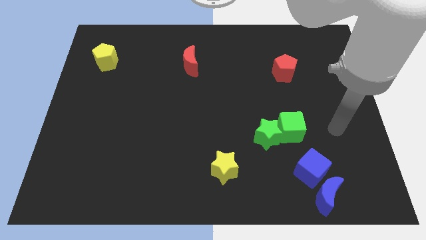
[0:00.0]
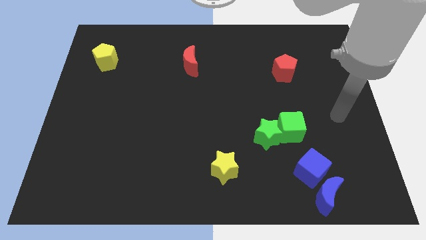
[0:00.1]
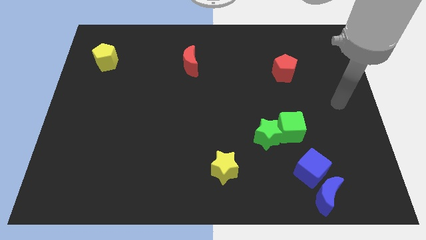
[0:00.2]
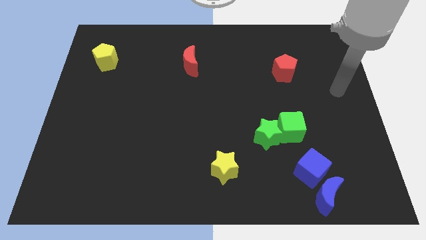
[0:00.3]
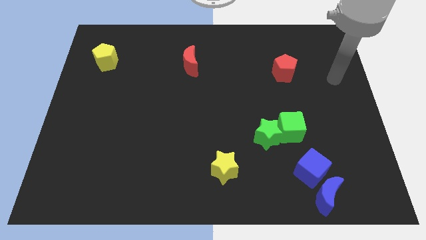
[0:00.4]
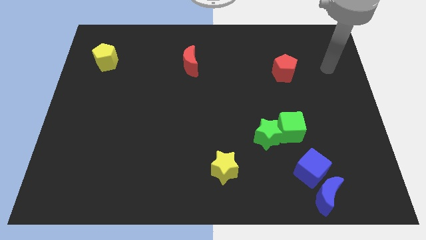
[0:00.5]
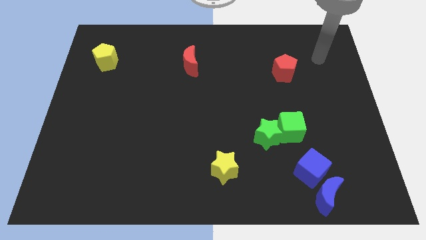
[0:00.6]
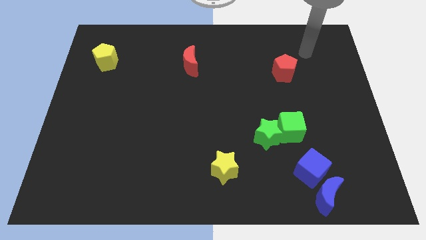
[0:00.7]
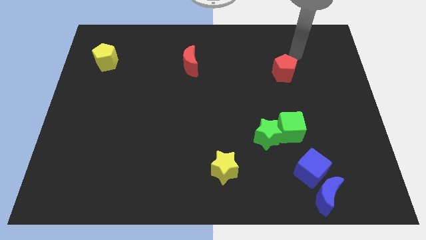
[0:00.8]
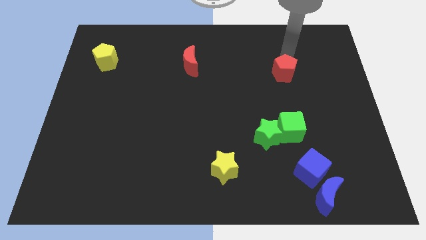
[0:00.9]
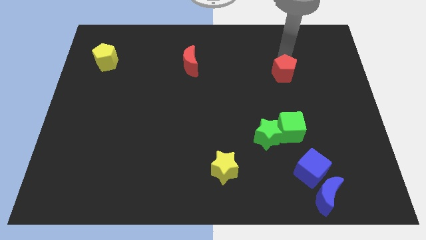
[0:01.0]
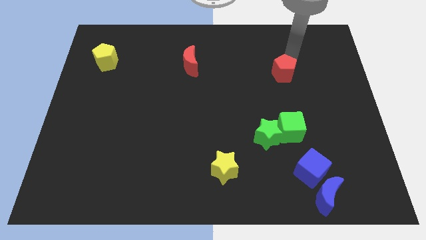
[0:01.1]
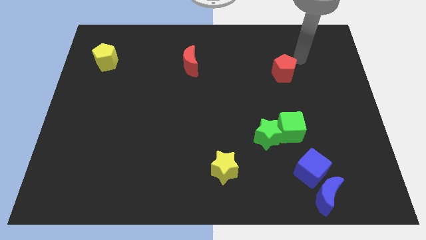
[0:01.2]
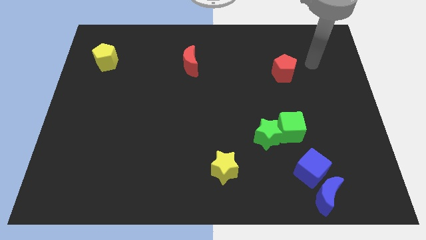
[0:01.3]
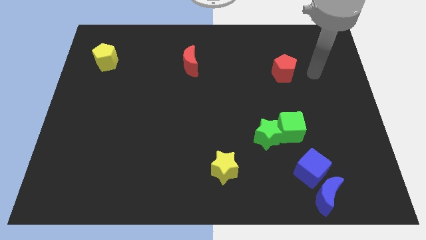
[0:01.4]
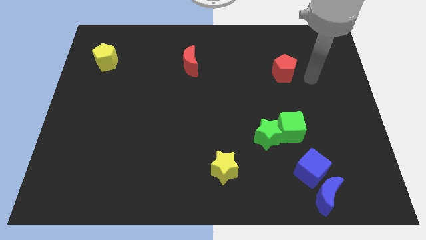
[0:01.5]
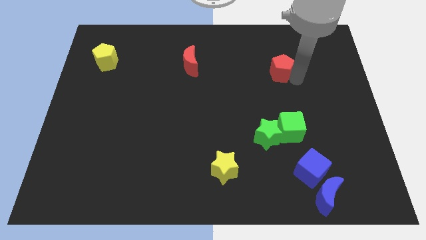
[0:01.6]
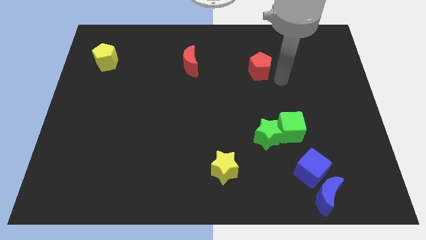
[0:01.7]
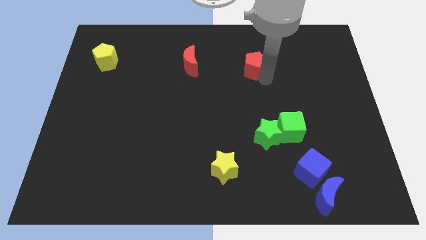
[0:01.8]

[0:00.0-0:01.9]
push the red pentagon towards the red moon

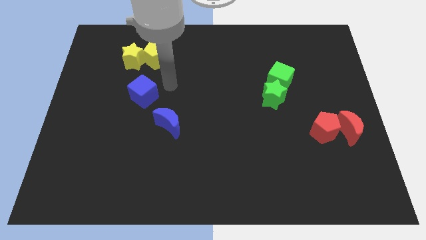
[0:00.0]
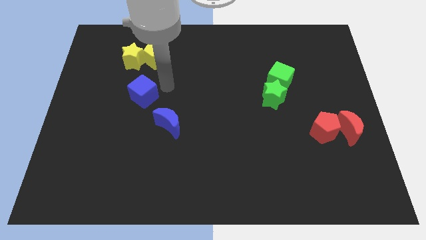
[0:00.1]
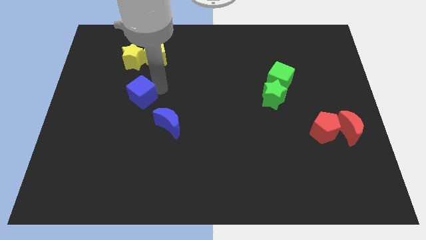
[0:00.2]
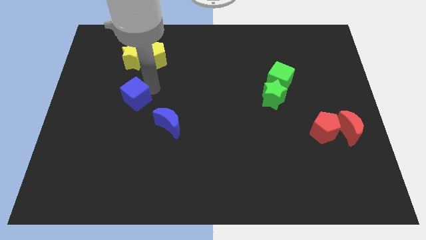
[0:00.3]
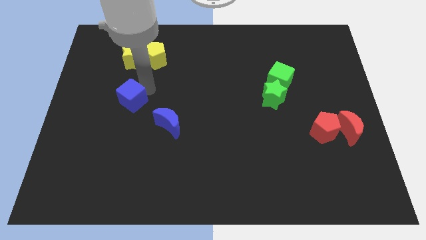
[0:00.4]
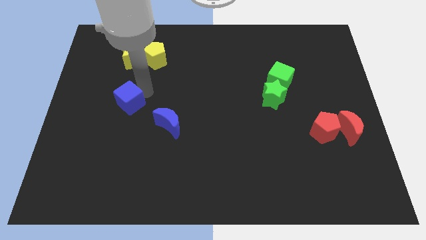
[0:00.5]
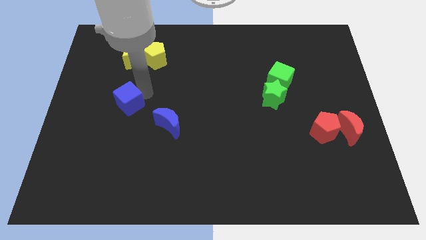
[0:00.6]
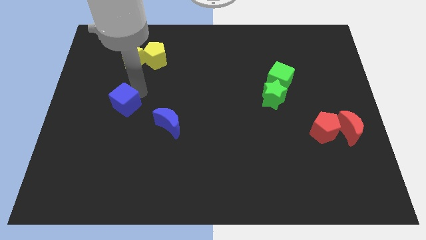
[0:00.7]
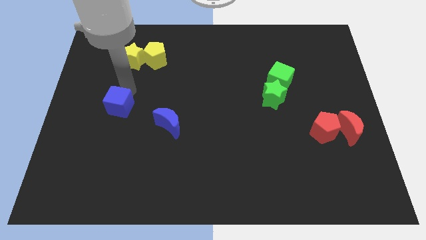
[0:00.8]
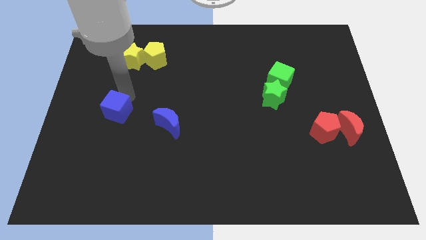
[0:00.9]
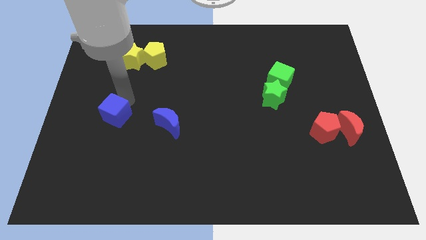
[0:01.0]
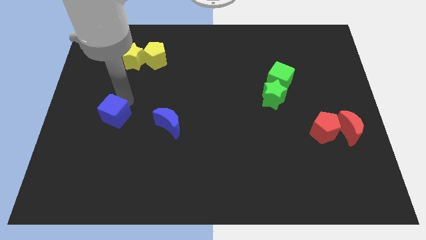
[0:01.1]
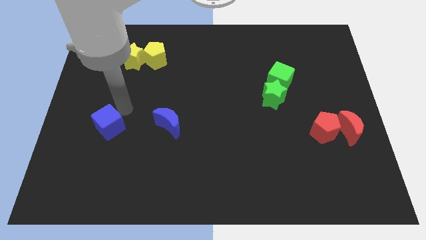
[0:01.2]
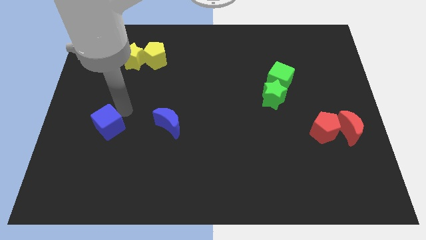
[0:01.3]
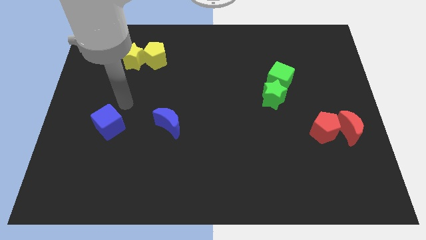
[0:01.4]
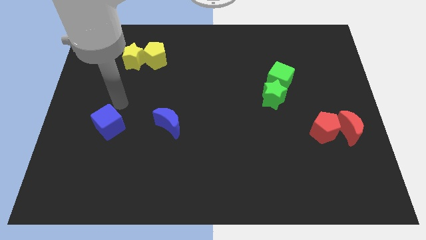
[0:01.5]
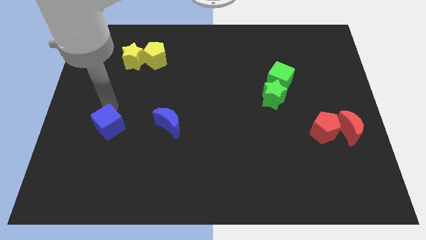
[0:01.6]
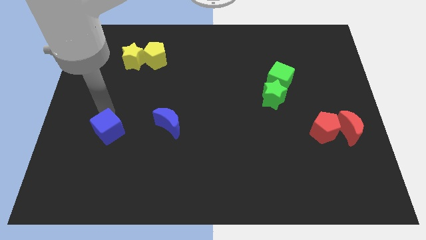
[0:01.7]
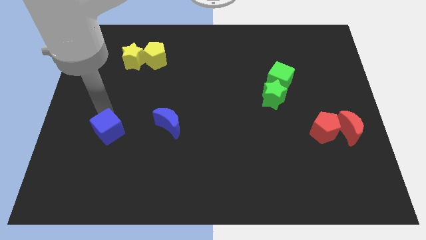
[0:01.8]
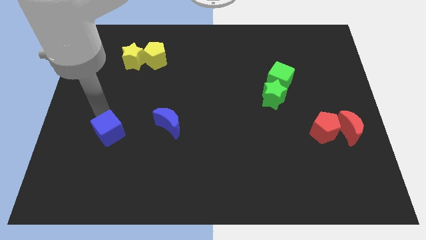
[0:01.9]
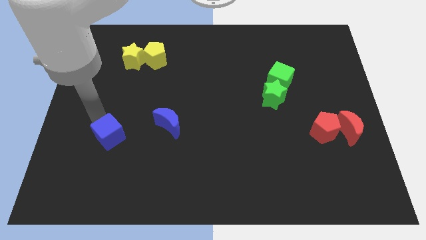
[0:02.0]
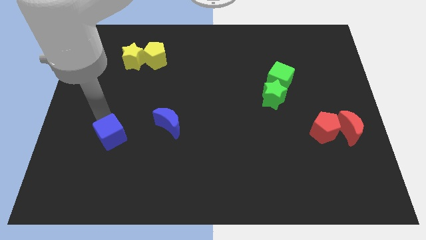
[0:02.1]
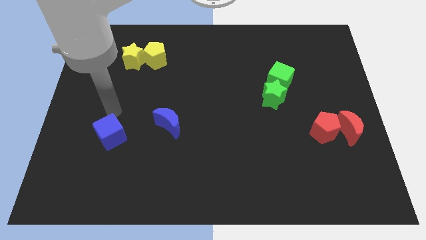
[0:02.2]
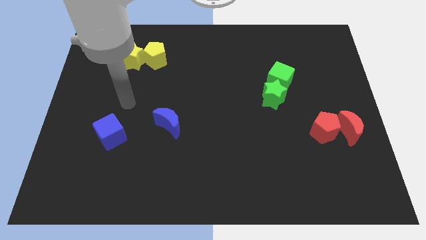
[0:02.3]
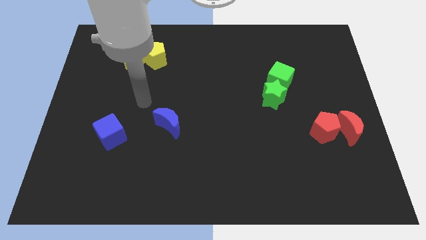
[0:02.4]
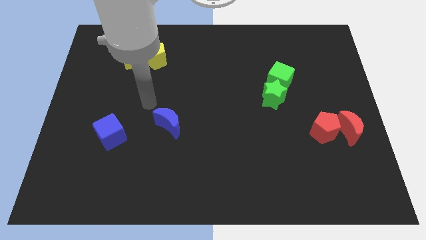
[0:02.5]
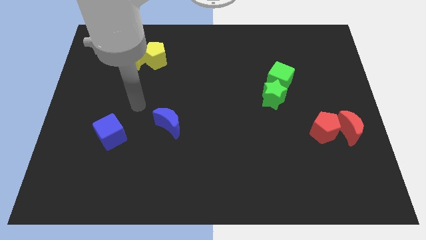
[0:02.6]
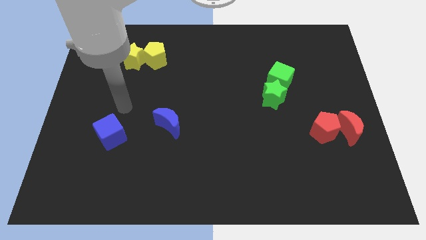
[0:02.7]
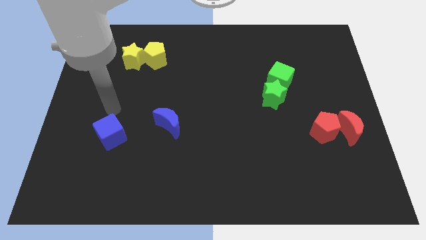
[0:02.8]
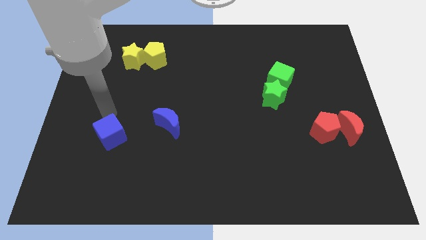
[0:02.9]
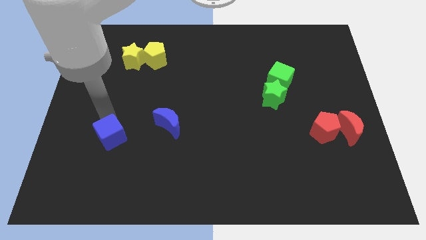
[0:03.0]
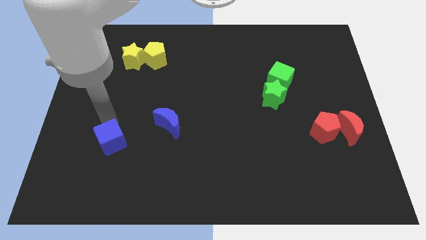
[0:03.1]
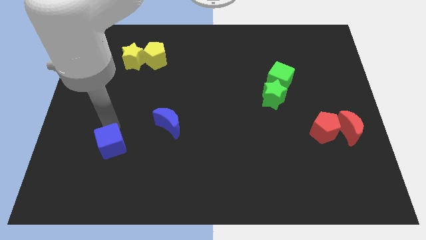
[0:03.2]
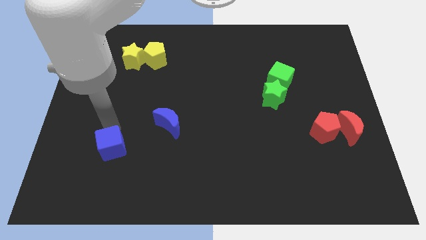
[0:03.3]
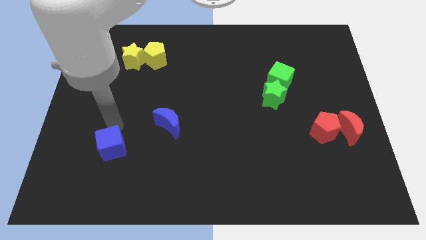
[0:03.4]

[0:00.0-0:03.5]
move blue cube towards the bottom of the board

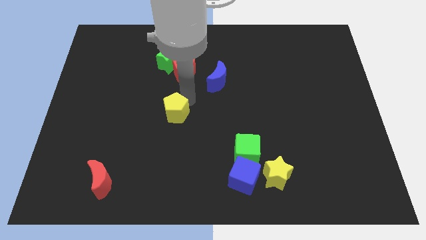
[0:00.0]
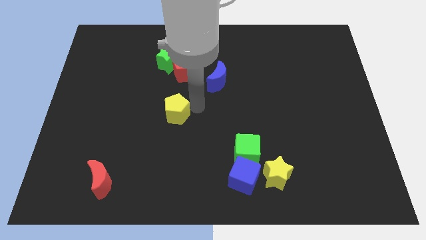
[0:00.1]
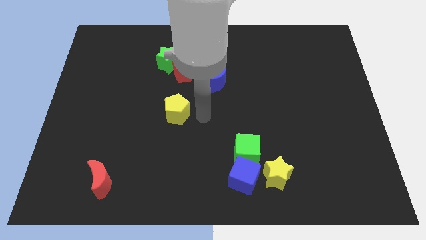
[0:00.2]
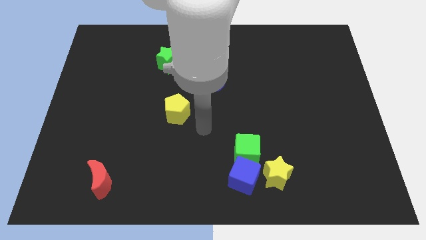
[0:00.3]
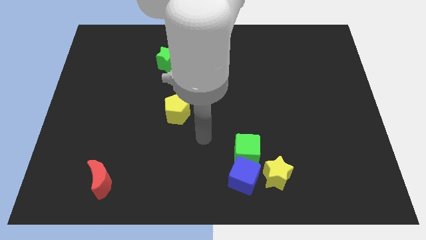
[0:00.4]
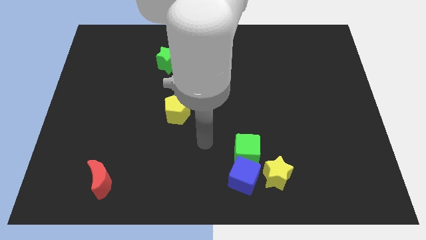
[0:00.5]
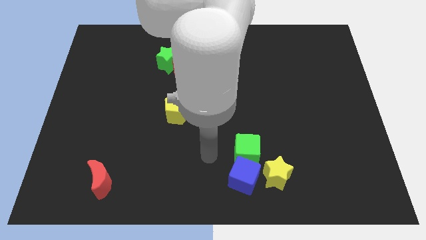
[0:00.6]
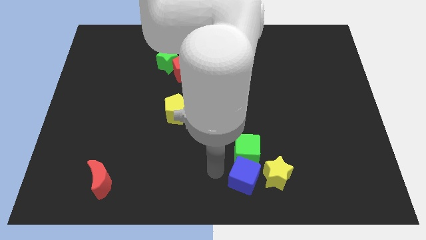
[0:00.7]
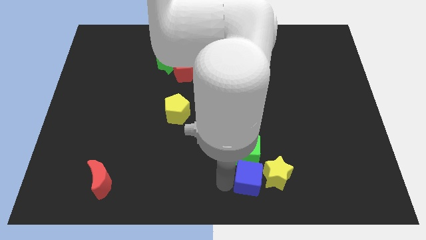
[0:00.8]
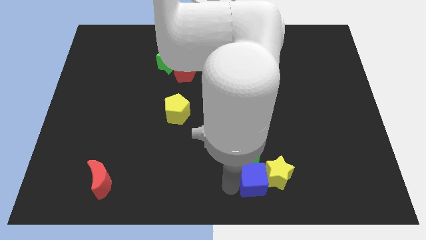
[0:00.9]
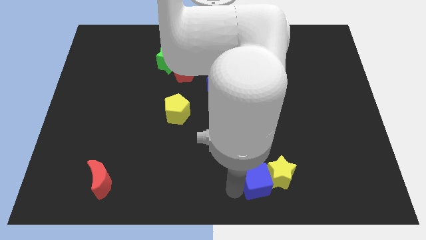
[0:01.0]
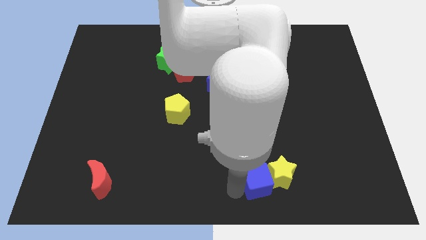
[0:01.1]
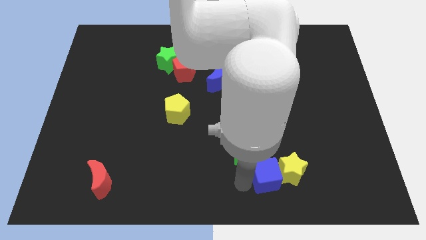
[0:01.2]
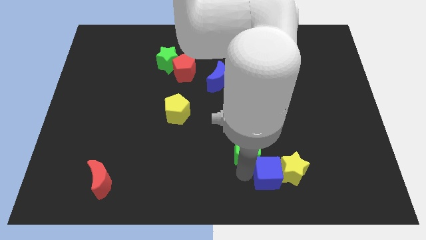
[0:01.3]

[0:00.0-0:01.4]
push the blue cube into the right side of the yellow star

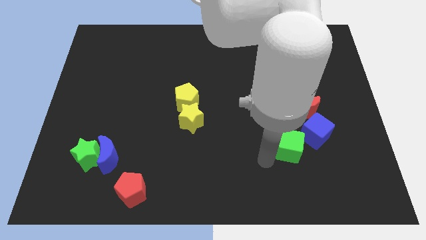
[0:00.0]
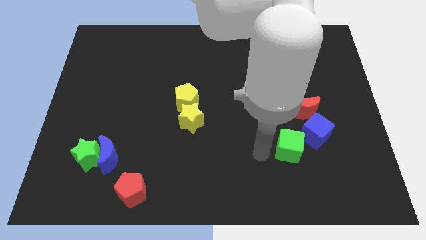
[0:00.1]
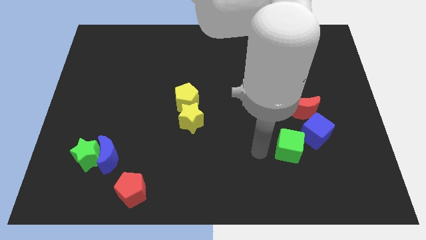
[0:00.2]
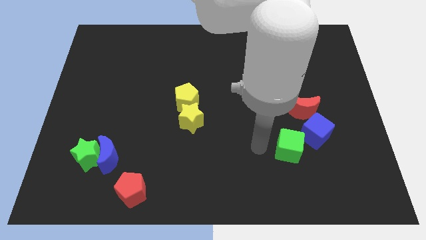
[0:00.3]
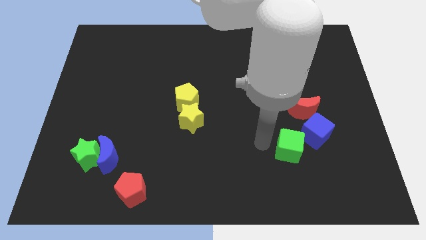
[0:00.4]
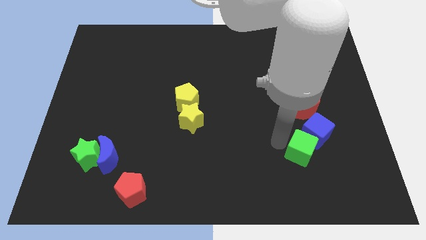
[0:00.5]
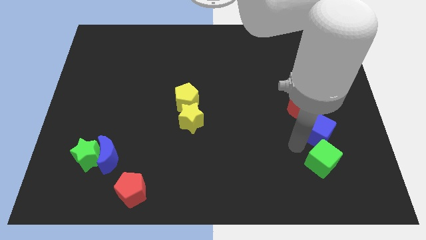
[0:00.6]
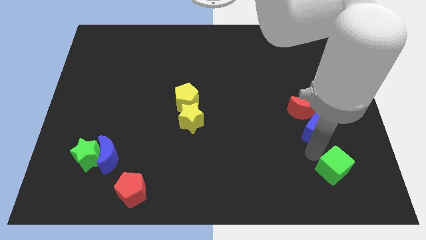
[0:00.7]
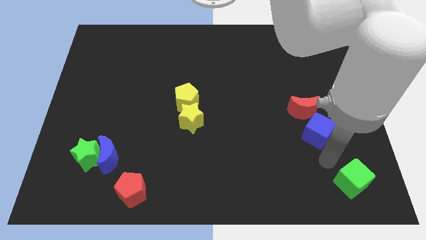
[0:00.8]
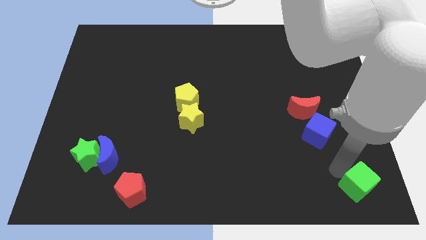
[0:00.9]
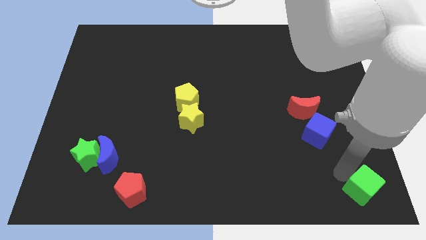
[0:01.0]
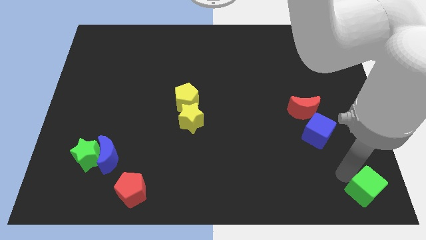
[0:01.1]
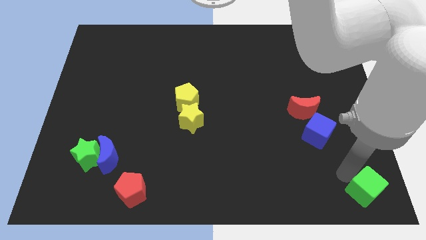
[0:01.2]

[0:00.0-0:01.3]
separate the blue cube and green cube

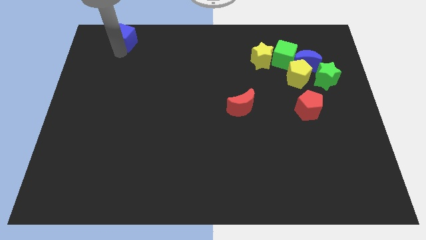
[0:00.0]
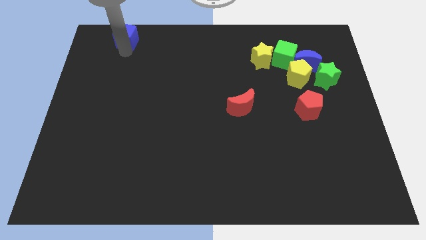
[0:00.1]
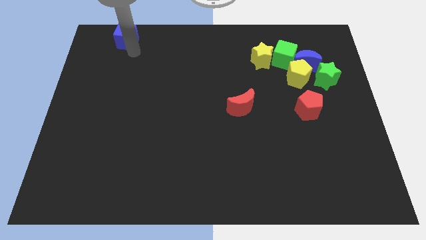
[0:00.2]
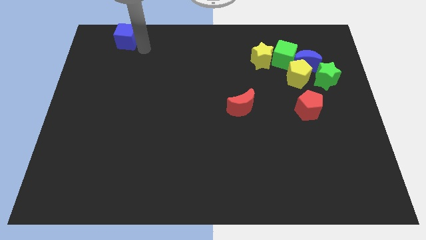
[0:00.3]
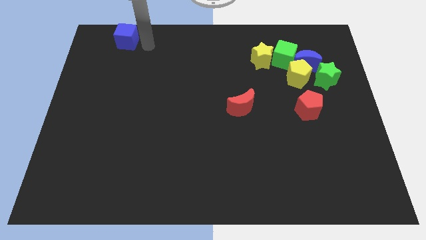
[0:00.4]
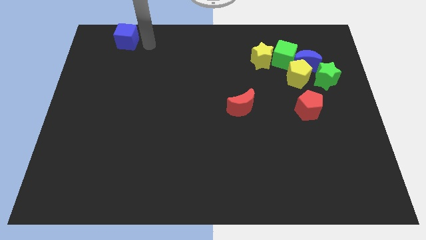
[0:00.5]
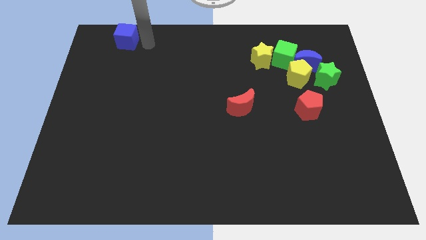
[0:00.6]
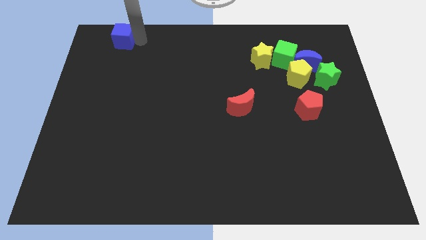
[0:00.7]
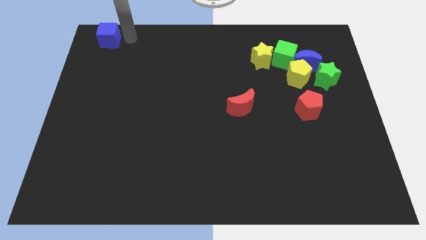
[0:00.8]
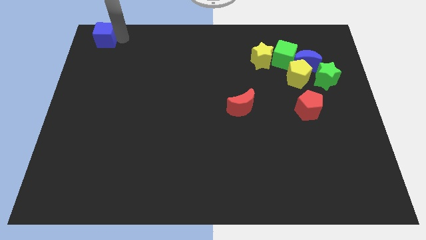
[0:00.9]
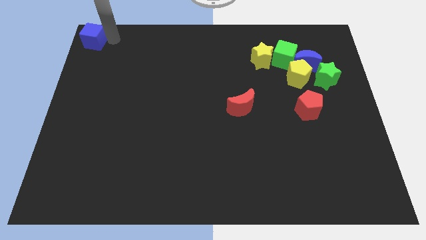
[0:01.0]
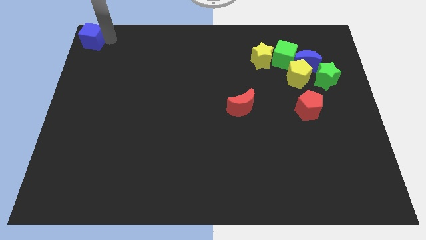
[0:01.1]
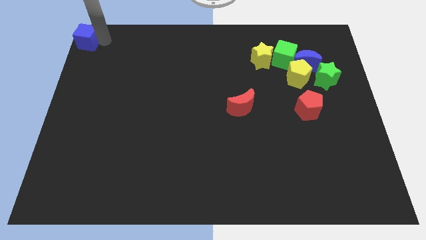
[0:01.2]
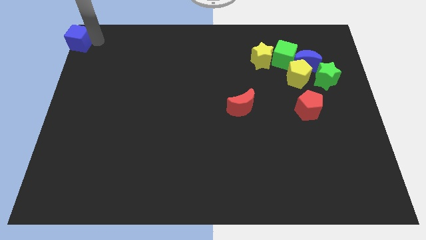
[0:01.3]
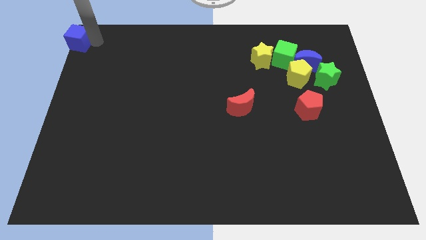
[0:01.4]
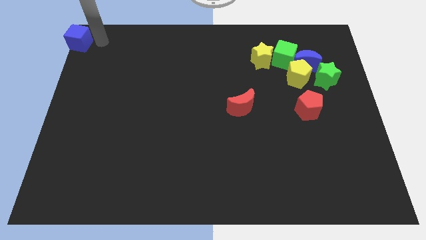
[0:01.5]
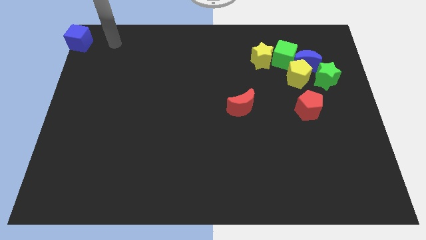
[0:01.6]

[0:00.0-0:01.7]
place the blue cube to the top left corner of the board
